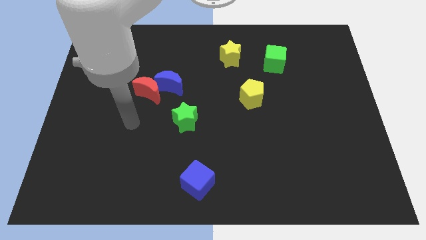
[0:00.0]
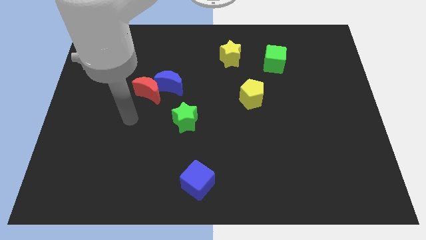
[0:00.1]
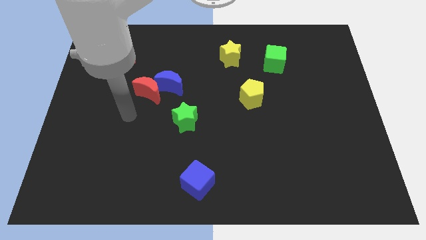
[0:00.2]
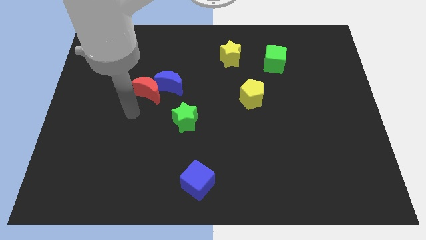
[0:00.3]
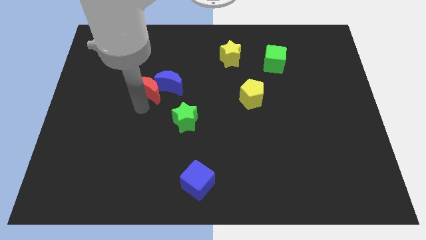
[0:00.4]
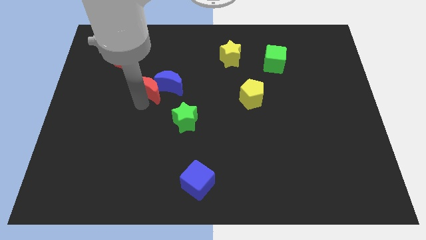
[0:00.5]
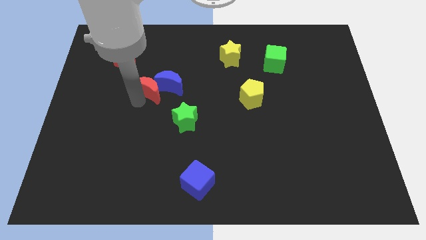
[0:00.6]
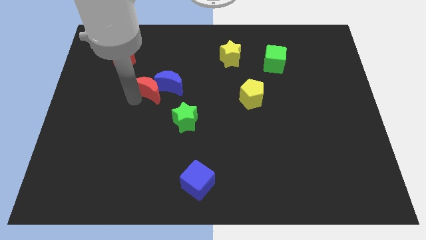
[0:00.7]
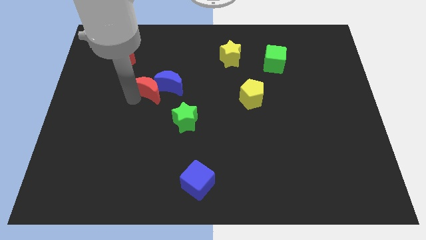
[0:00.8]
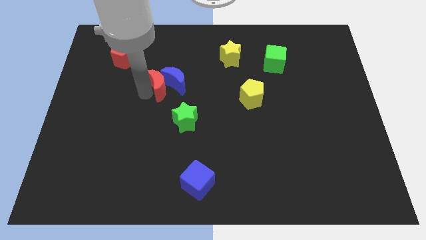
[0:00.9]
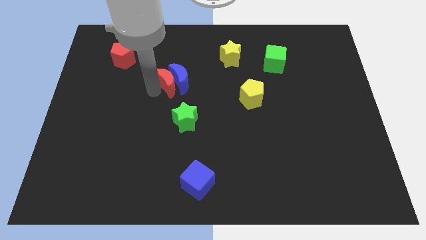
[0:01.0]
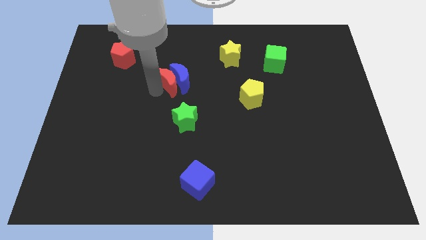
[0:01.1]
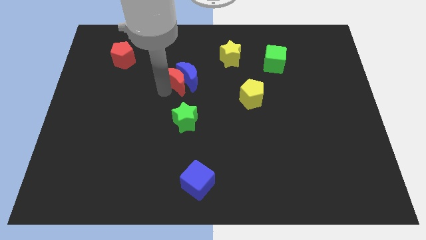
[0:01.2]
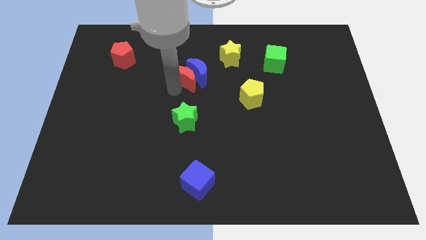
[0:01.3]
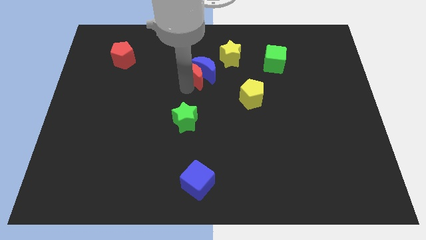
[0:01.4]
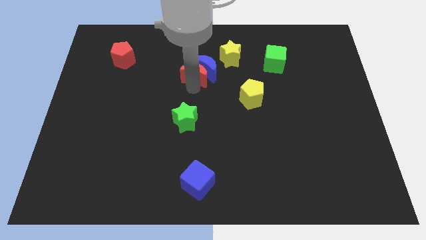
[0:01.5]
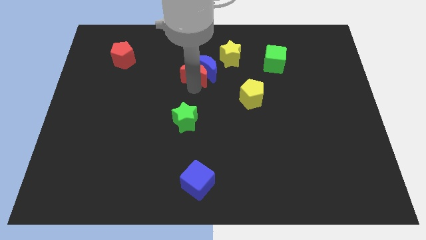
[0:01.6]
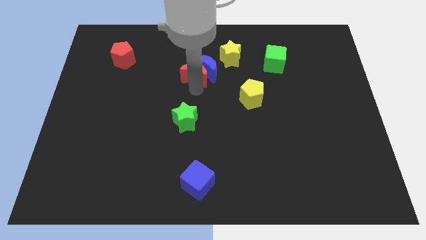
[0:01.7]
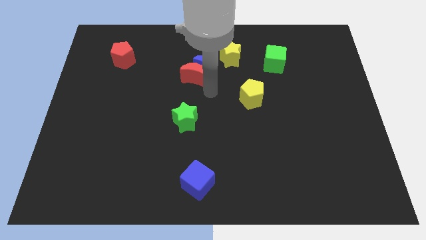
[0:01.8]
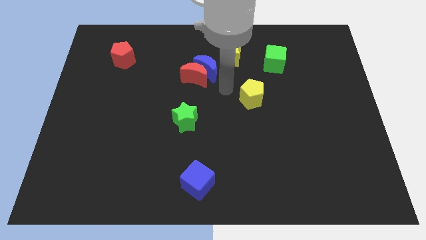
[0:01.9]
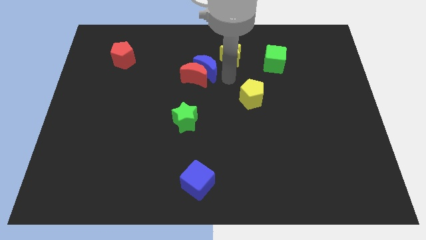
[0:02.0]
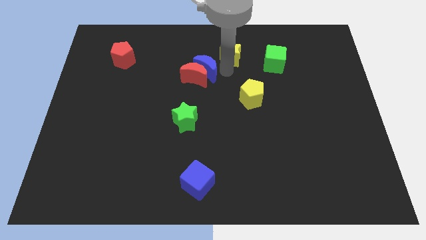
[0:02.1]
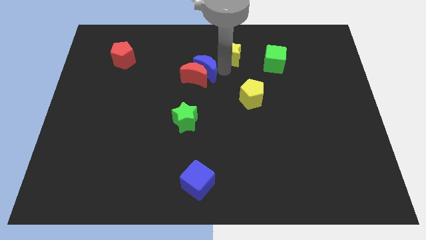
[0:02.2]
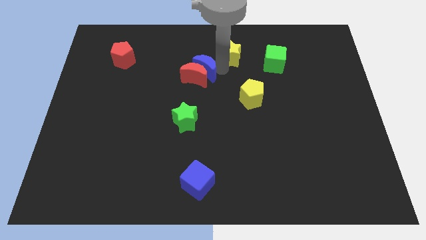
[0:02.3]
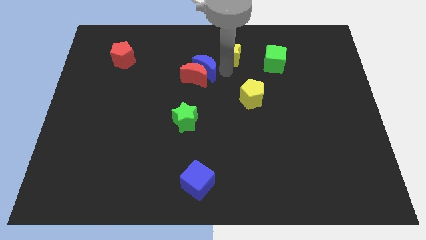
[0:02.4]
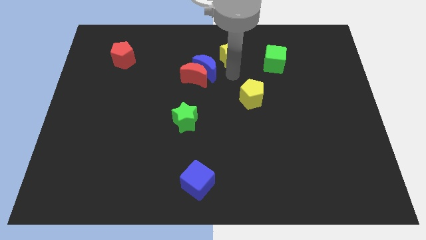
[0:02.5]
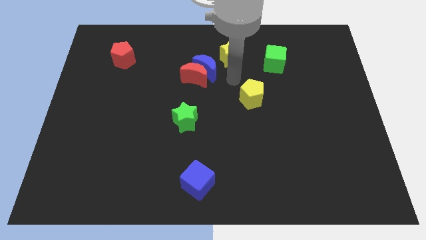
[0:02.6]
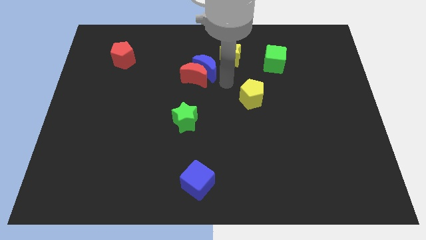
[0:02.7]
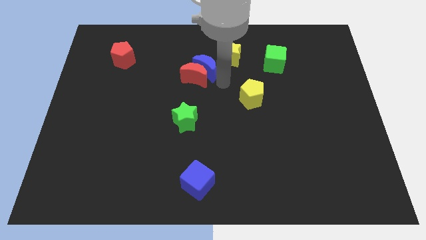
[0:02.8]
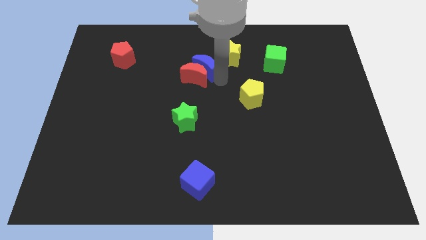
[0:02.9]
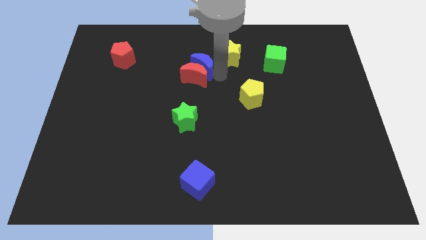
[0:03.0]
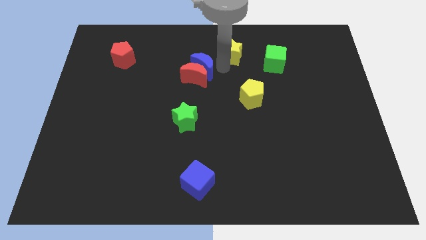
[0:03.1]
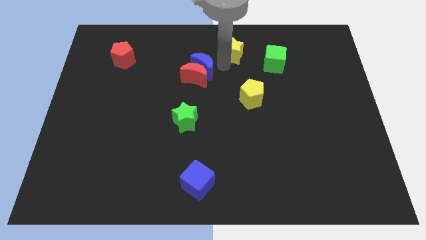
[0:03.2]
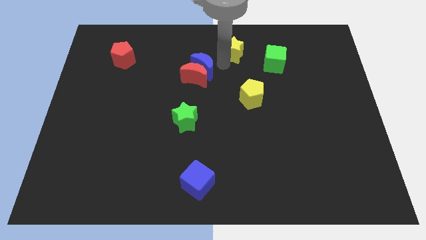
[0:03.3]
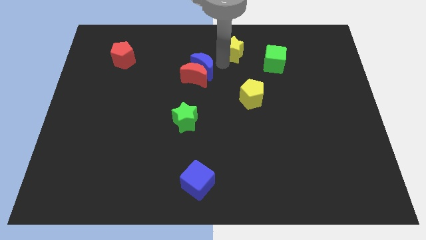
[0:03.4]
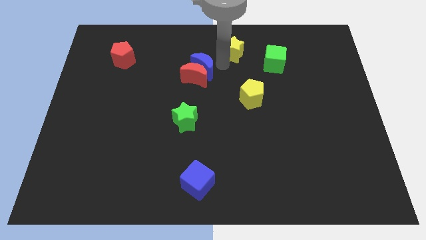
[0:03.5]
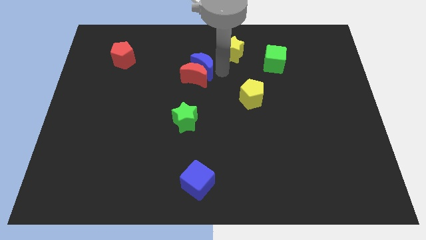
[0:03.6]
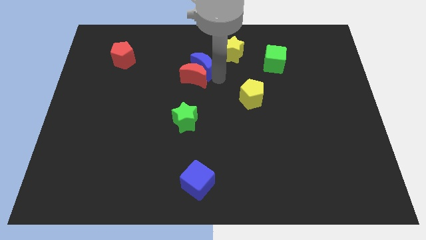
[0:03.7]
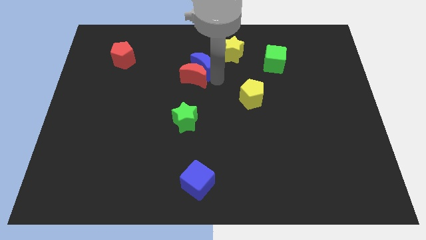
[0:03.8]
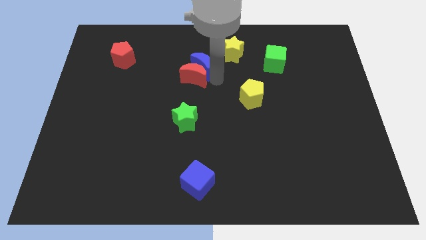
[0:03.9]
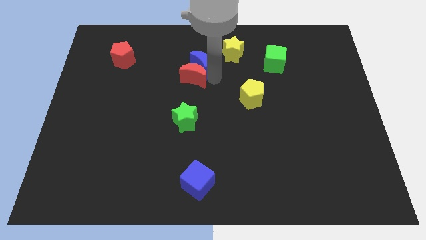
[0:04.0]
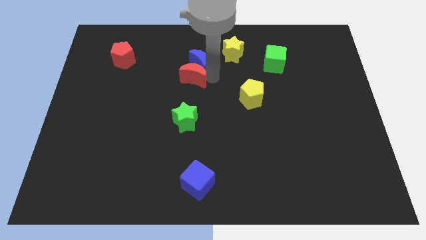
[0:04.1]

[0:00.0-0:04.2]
drag the red moon vertically on top of the green star

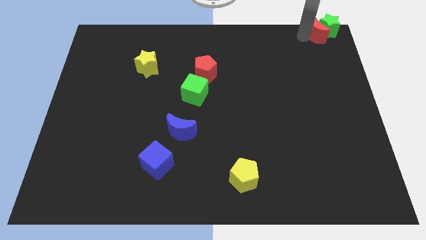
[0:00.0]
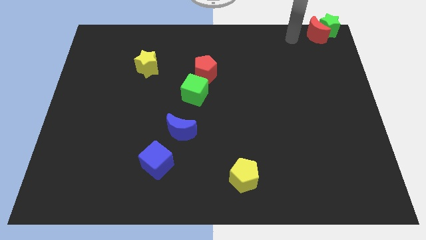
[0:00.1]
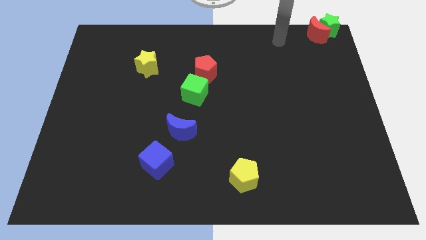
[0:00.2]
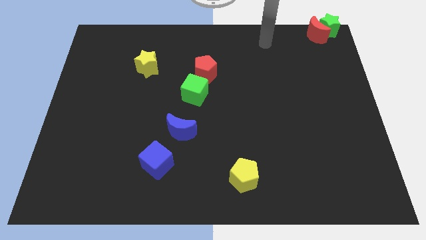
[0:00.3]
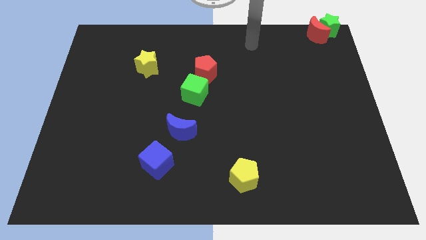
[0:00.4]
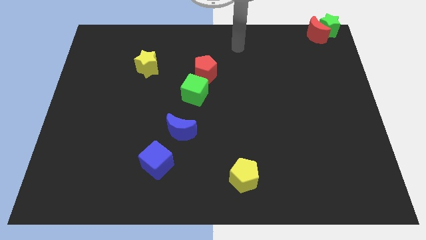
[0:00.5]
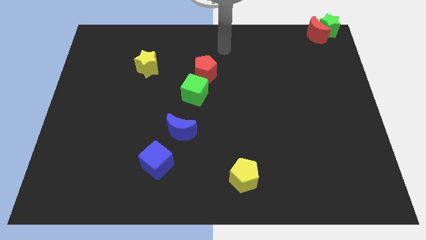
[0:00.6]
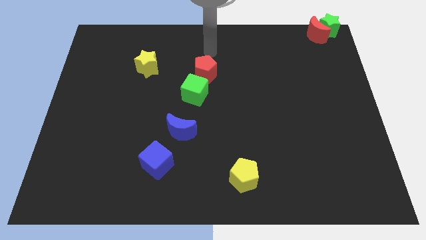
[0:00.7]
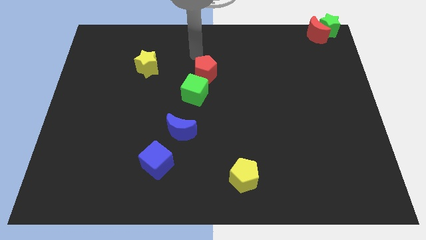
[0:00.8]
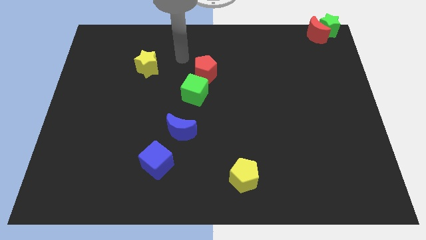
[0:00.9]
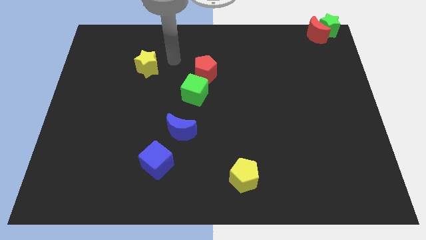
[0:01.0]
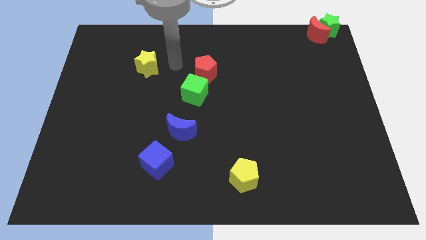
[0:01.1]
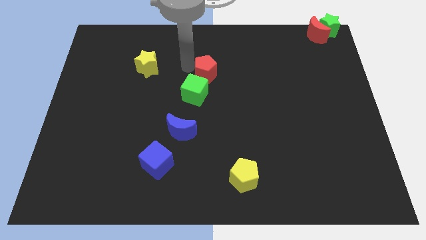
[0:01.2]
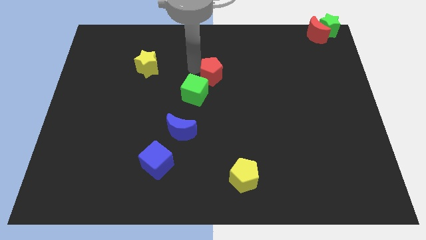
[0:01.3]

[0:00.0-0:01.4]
move the hand to the red pentagon on the left side

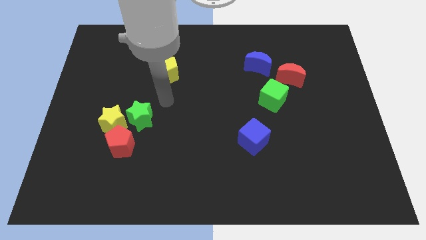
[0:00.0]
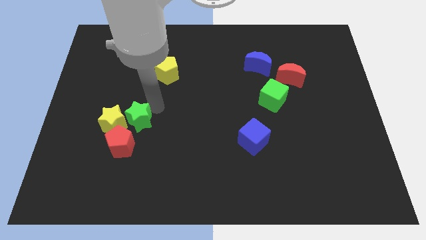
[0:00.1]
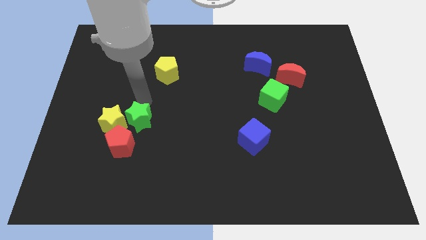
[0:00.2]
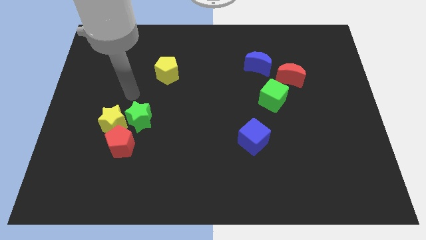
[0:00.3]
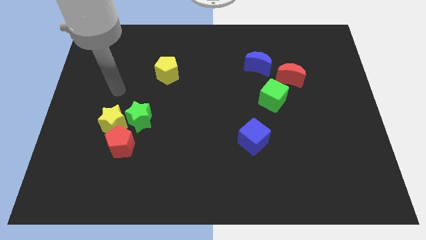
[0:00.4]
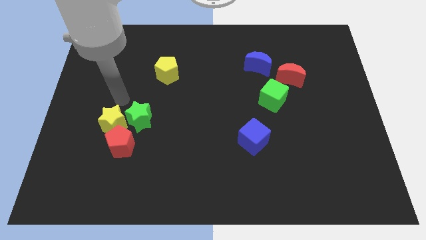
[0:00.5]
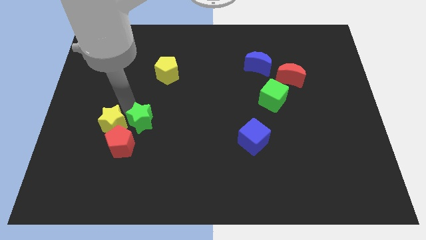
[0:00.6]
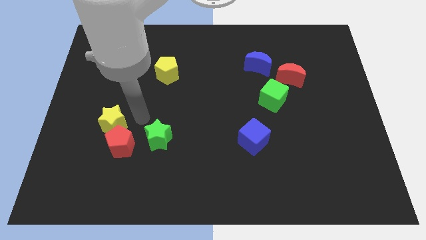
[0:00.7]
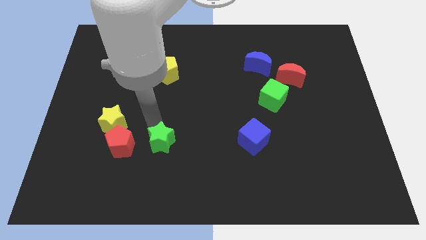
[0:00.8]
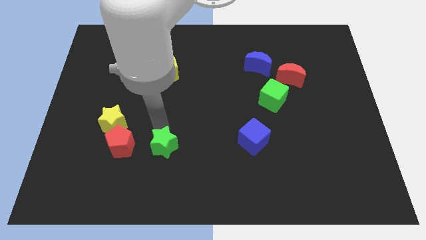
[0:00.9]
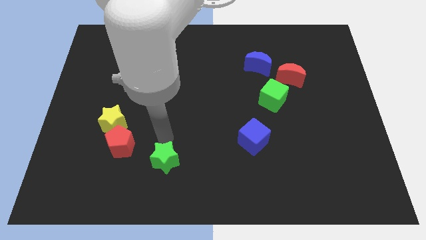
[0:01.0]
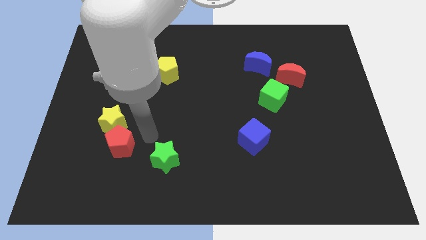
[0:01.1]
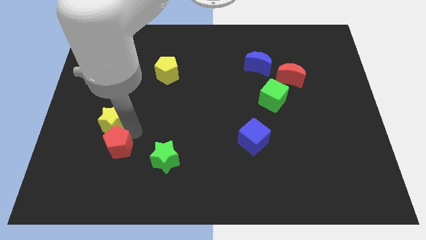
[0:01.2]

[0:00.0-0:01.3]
slide the green star towards the bottom center of the board

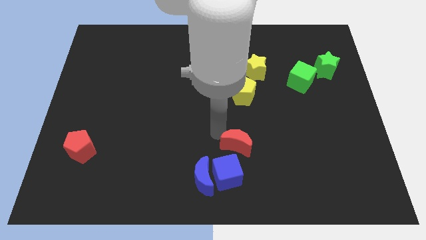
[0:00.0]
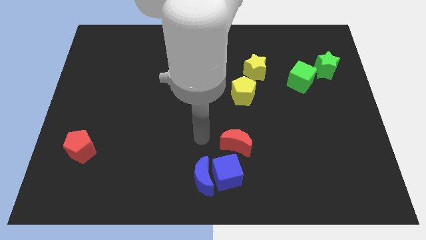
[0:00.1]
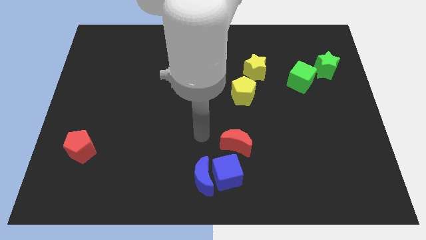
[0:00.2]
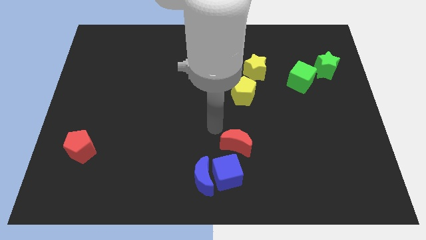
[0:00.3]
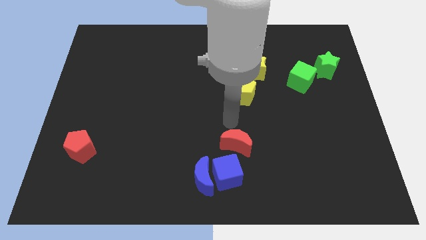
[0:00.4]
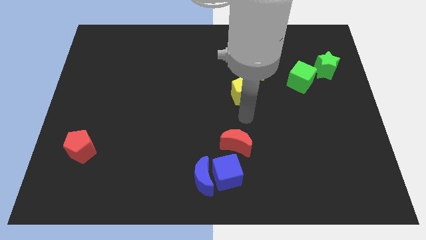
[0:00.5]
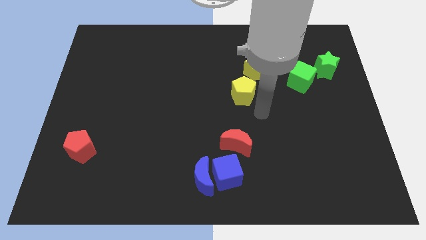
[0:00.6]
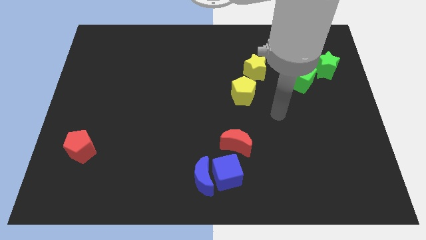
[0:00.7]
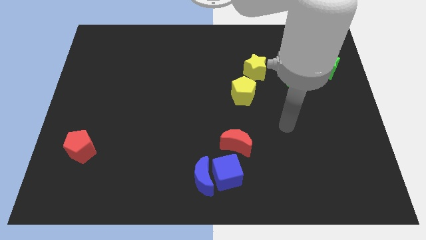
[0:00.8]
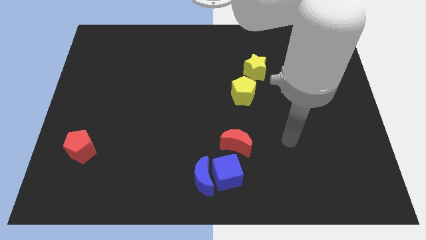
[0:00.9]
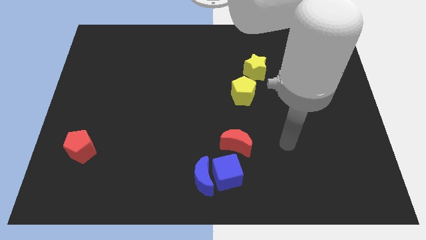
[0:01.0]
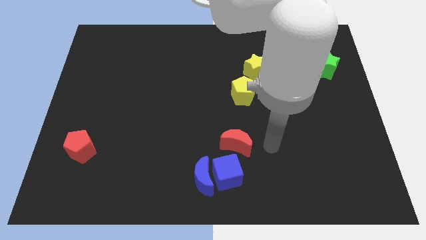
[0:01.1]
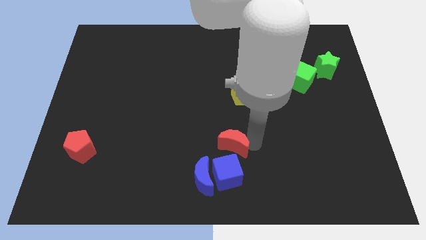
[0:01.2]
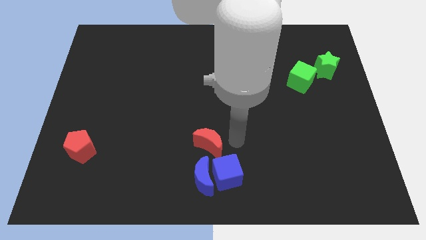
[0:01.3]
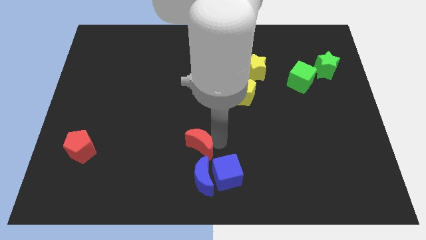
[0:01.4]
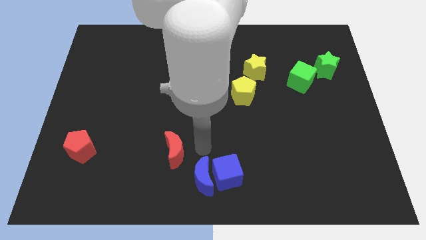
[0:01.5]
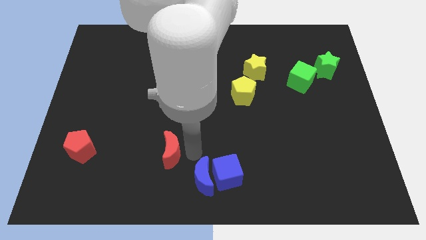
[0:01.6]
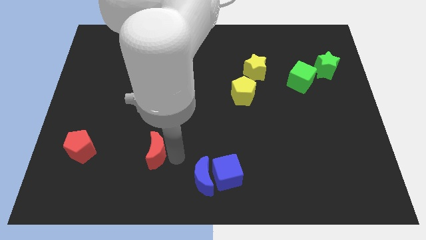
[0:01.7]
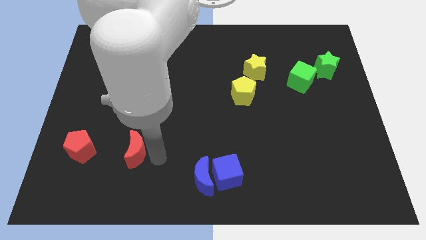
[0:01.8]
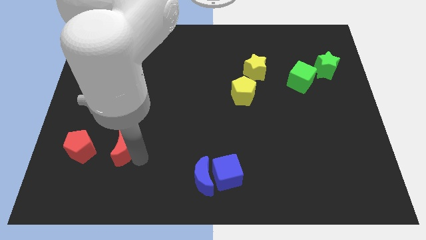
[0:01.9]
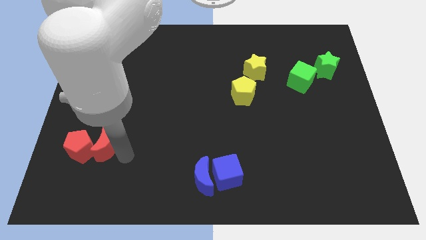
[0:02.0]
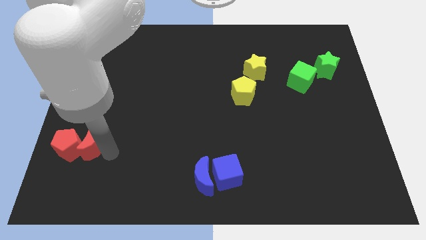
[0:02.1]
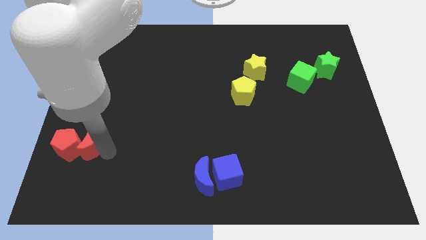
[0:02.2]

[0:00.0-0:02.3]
push the red moon into the red pentagon
